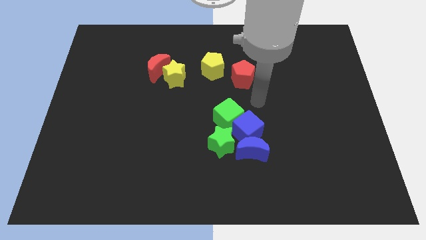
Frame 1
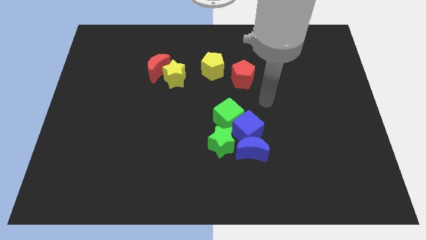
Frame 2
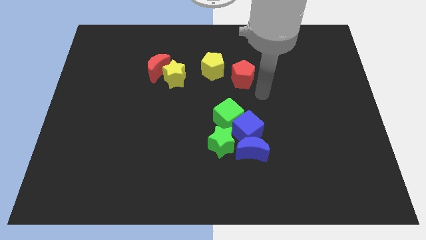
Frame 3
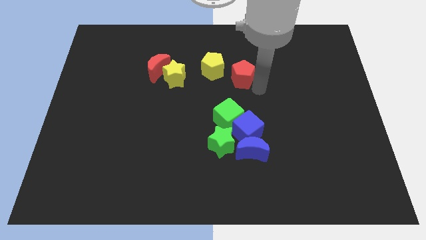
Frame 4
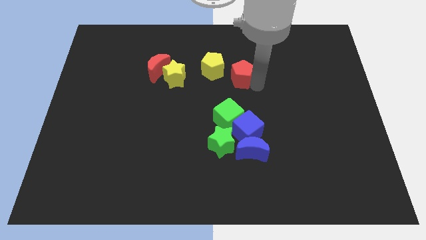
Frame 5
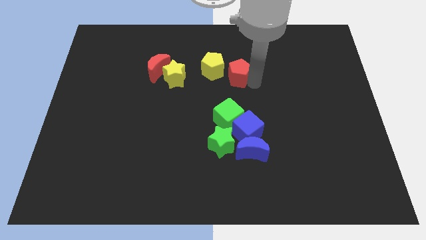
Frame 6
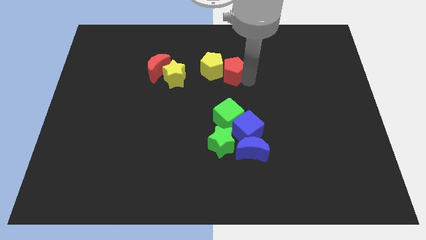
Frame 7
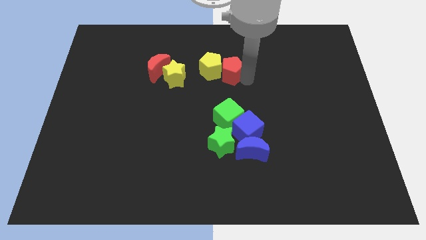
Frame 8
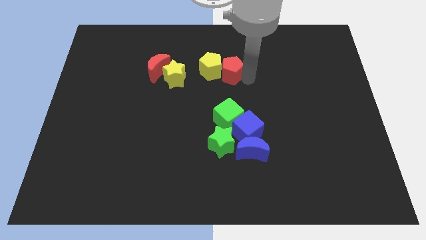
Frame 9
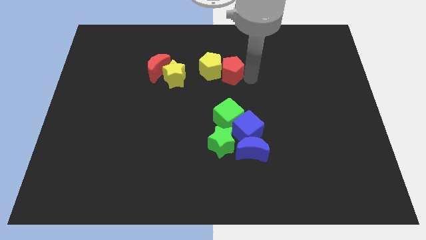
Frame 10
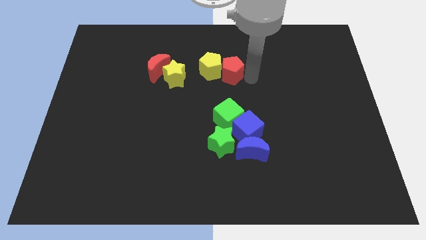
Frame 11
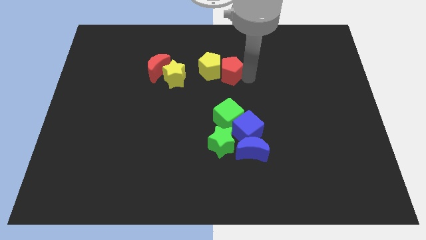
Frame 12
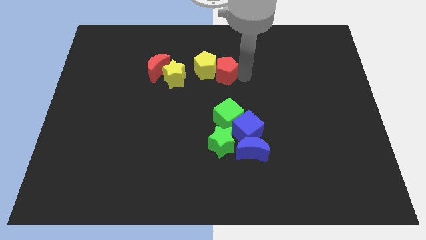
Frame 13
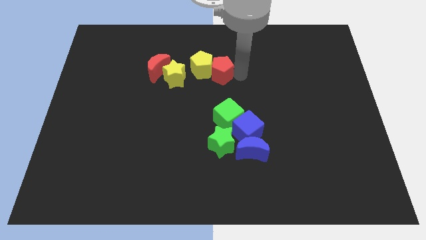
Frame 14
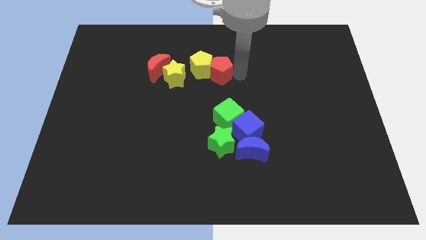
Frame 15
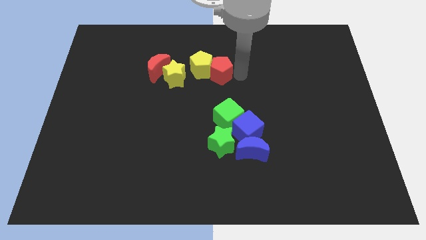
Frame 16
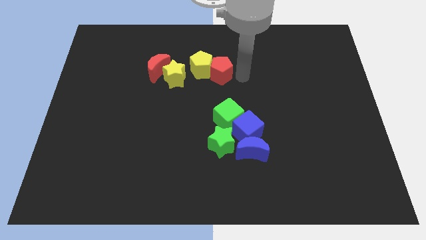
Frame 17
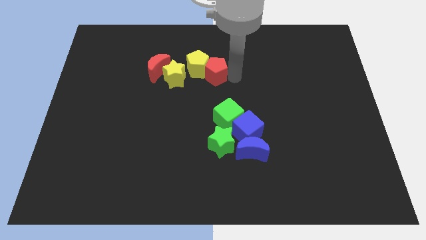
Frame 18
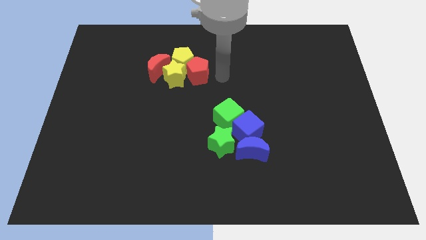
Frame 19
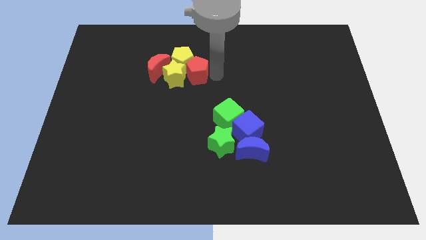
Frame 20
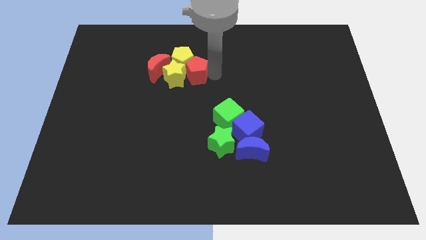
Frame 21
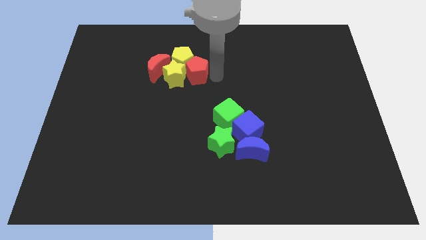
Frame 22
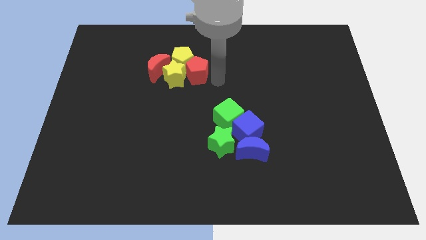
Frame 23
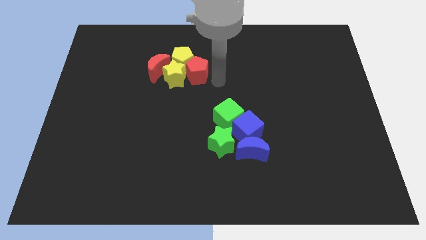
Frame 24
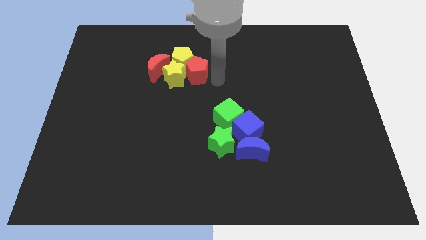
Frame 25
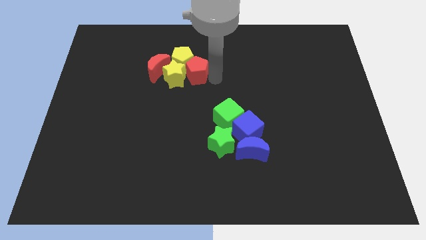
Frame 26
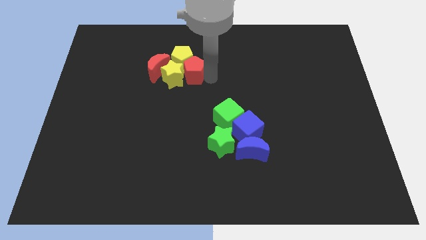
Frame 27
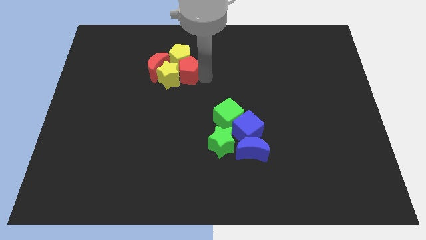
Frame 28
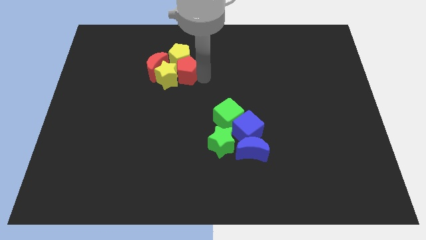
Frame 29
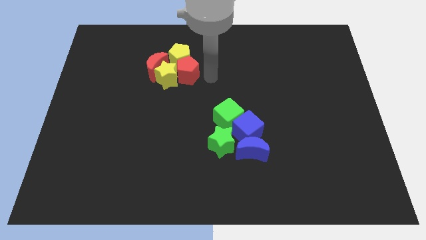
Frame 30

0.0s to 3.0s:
move the yellow pentagon and red pentagon towards left to form a group

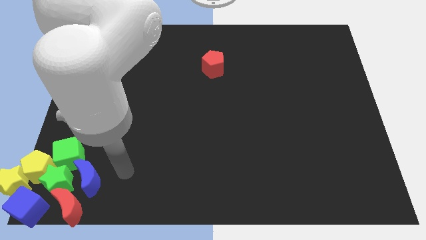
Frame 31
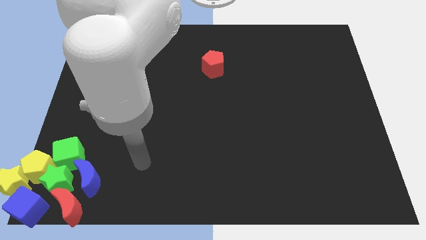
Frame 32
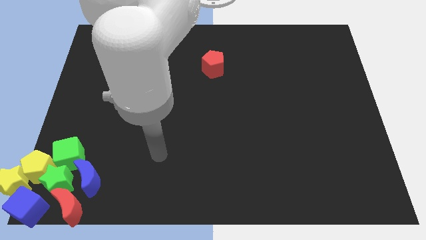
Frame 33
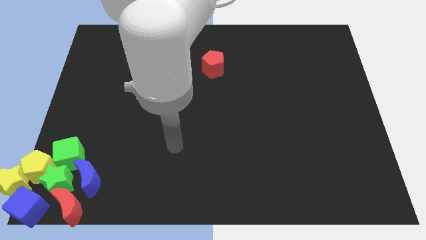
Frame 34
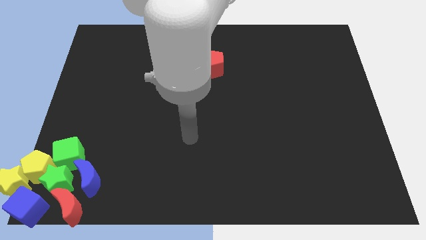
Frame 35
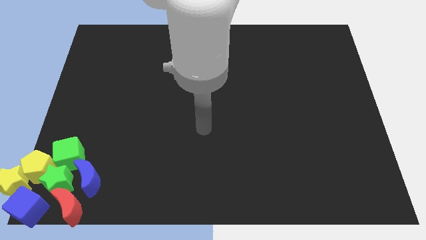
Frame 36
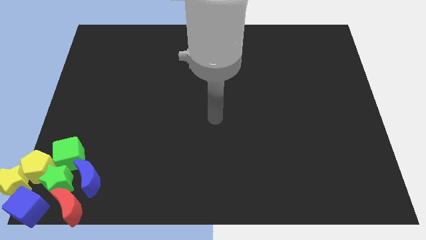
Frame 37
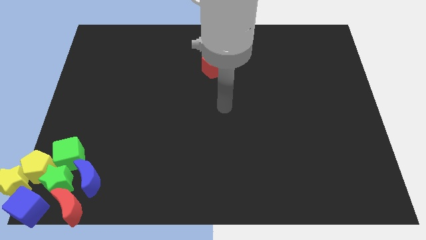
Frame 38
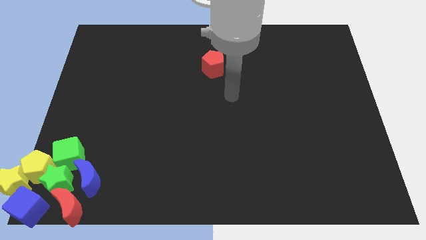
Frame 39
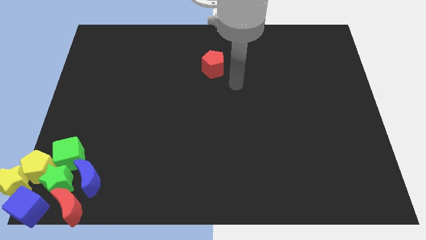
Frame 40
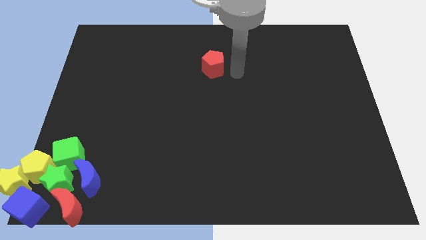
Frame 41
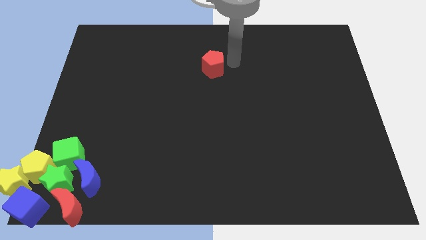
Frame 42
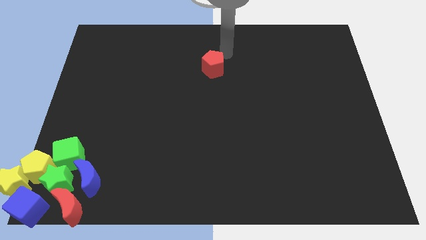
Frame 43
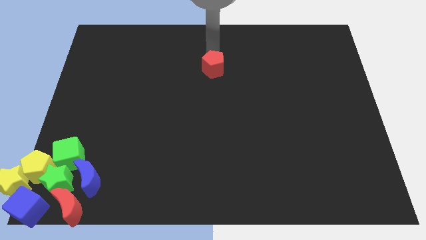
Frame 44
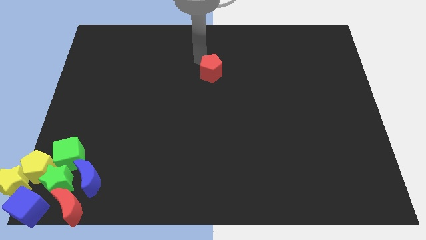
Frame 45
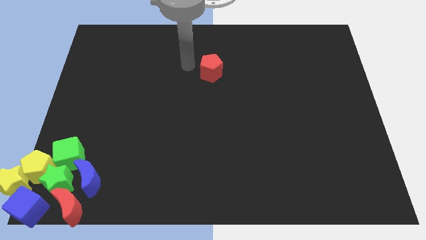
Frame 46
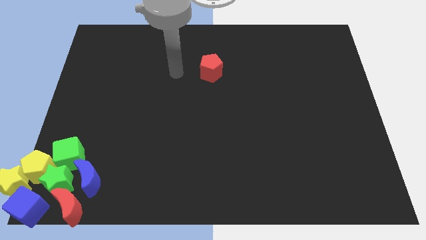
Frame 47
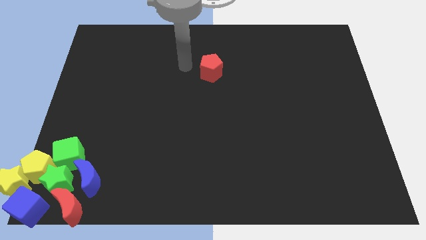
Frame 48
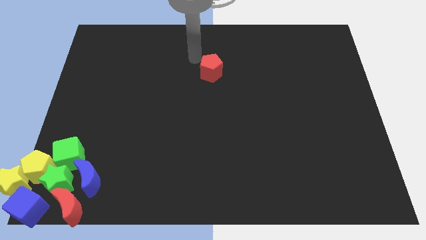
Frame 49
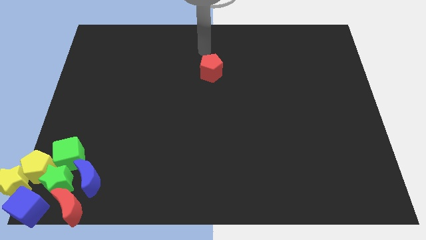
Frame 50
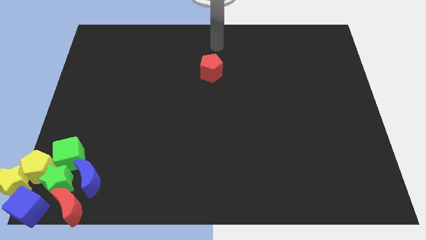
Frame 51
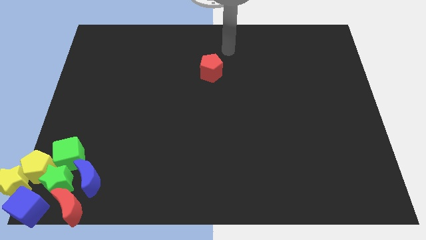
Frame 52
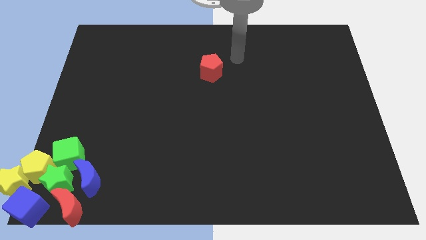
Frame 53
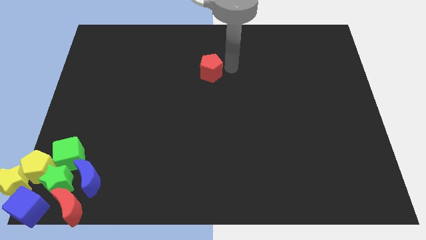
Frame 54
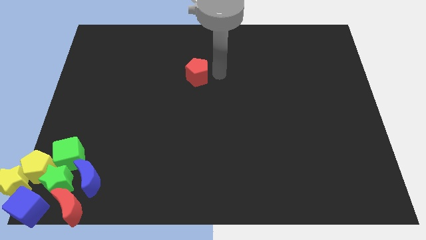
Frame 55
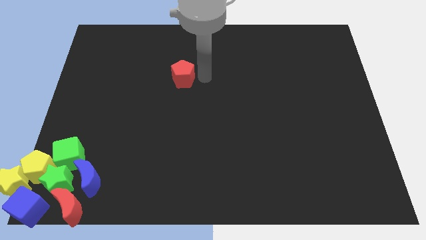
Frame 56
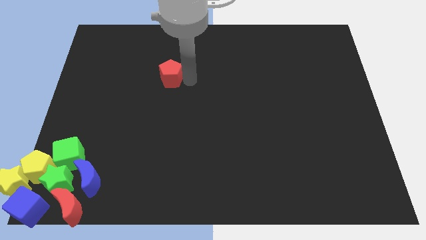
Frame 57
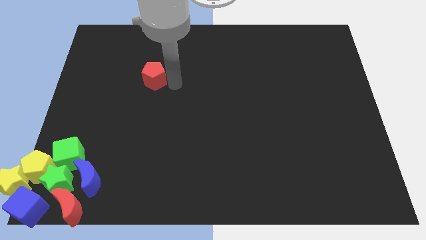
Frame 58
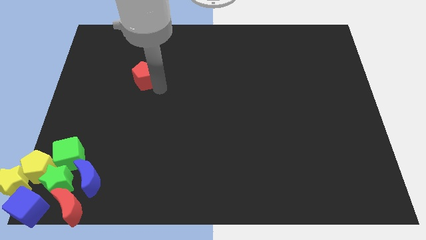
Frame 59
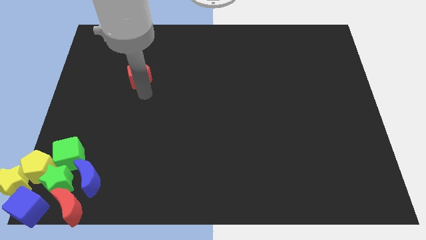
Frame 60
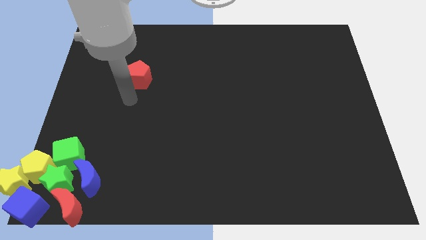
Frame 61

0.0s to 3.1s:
push the red pentagon towards the left side of the board

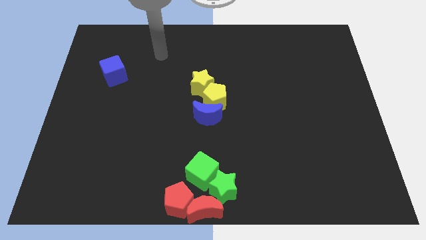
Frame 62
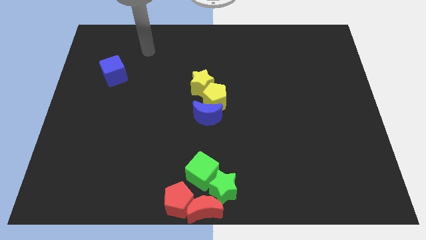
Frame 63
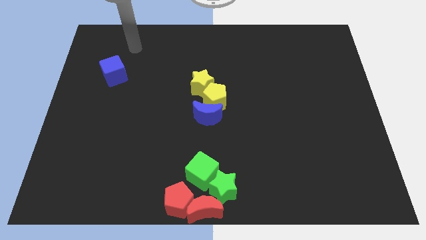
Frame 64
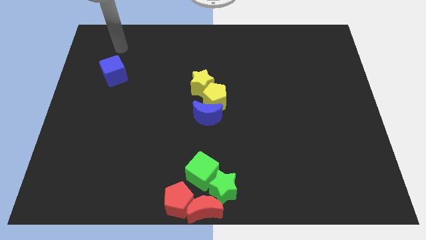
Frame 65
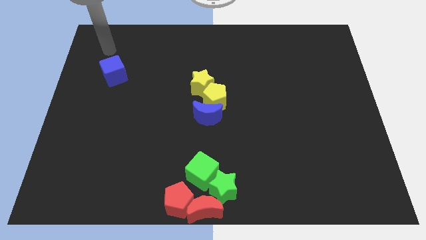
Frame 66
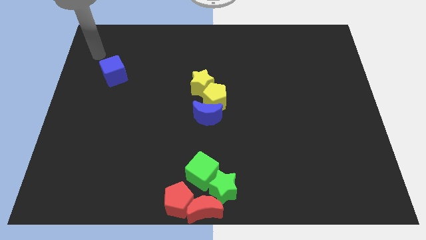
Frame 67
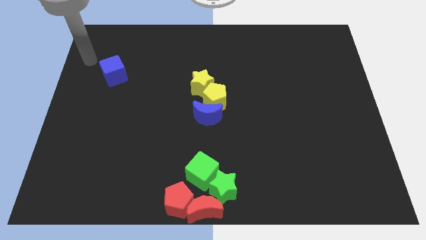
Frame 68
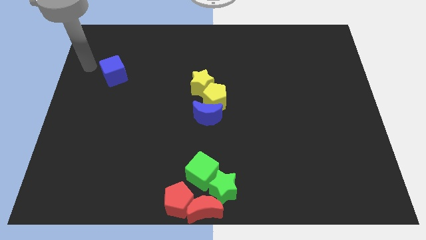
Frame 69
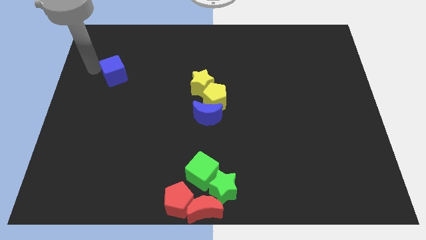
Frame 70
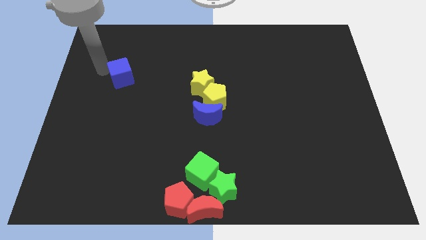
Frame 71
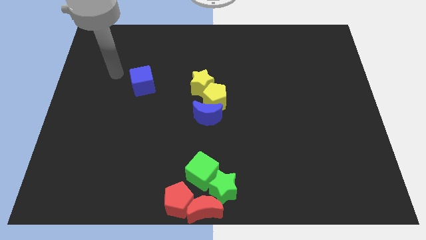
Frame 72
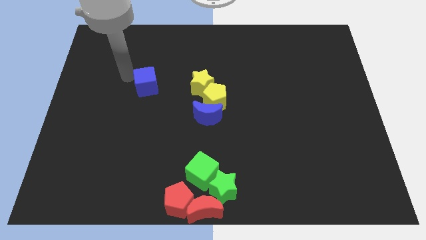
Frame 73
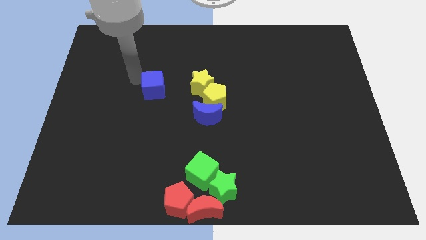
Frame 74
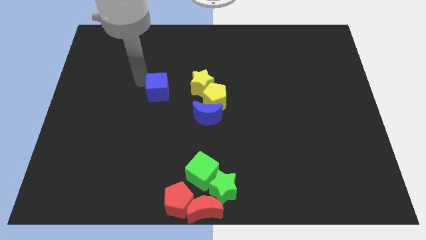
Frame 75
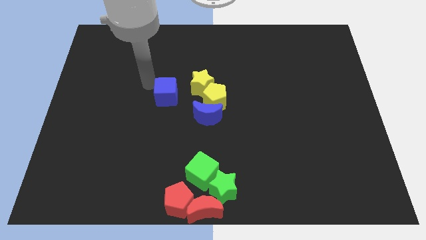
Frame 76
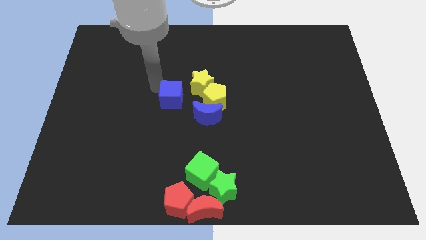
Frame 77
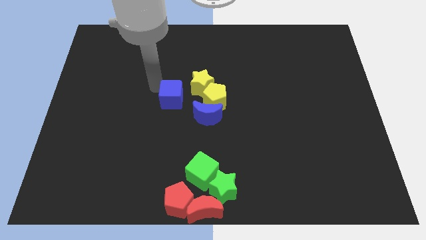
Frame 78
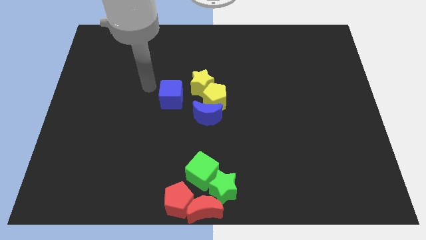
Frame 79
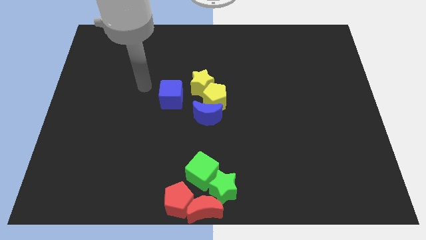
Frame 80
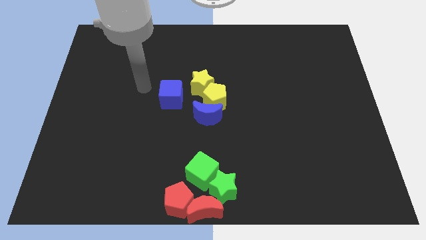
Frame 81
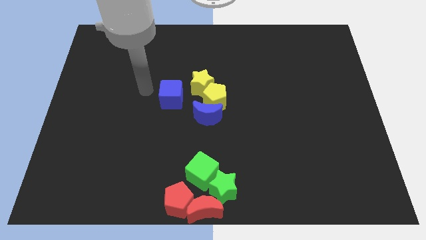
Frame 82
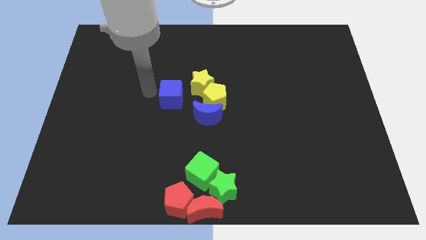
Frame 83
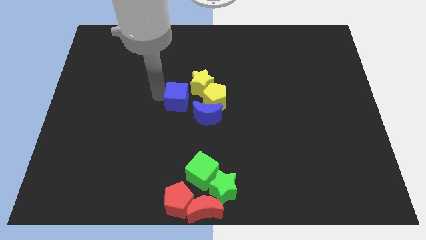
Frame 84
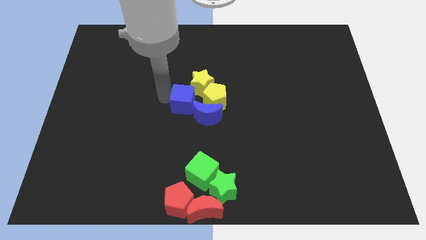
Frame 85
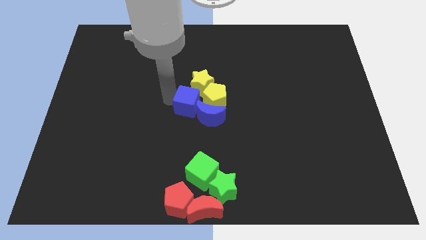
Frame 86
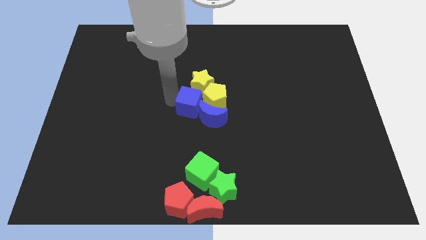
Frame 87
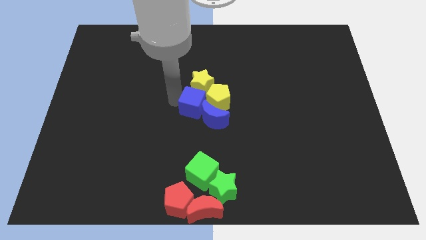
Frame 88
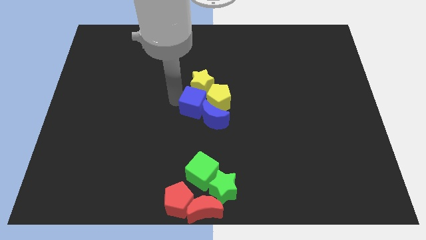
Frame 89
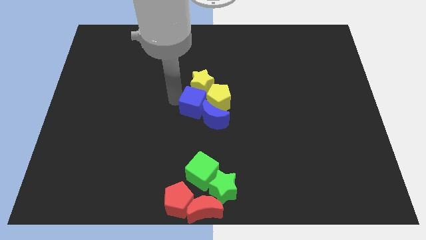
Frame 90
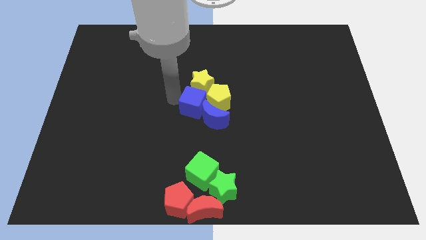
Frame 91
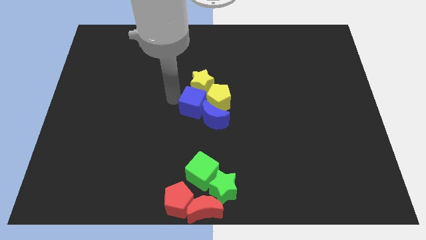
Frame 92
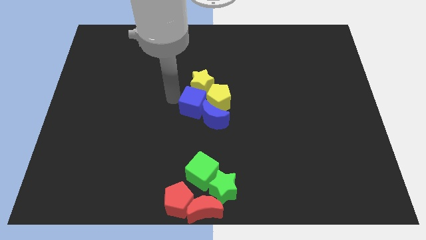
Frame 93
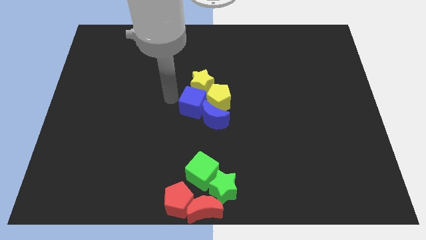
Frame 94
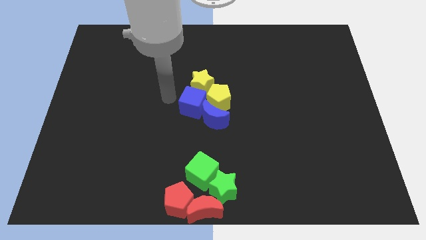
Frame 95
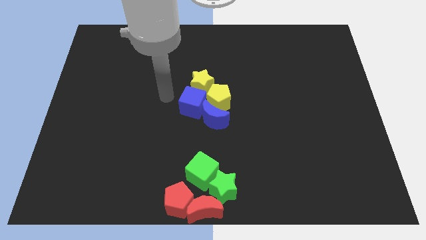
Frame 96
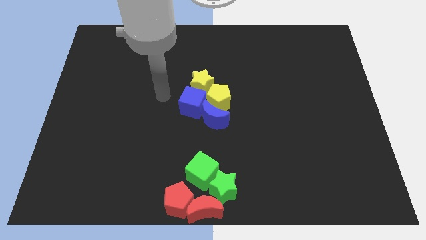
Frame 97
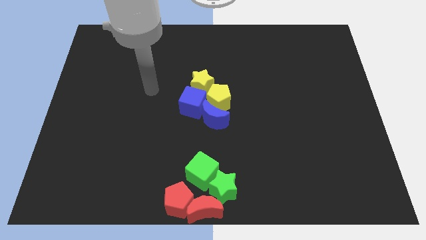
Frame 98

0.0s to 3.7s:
push the blue cube into the blue crescent
